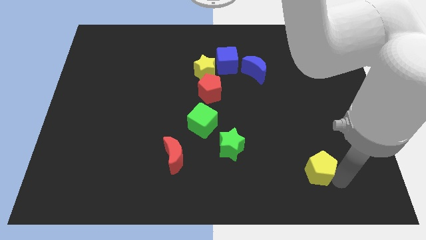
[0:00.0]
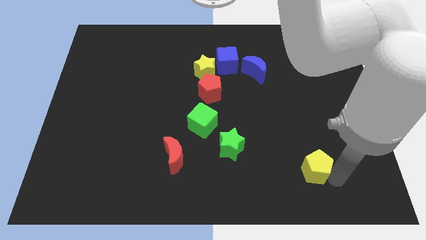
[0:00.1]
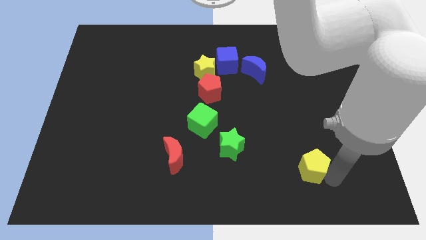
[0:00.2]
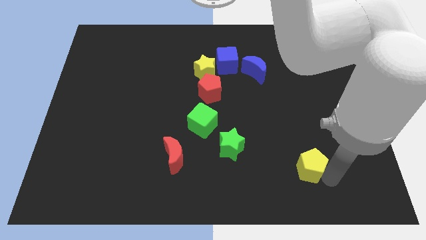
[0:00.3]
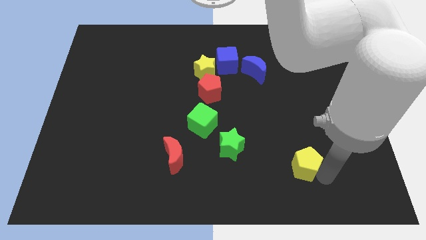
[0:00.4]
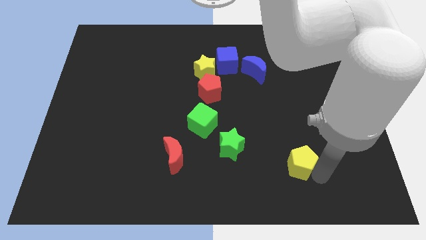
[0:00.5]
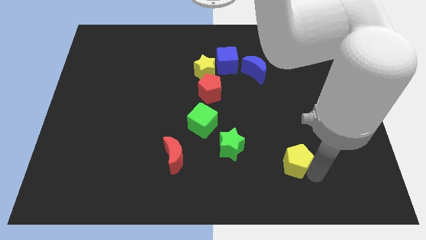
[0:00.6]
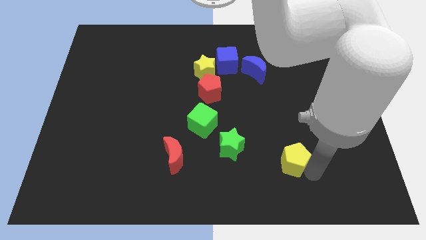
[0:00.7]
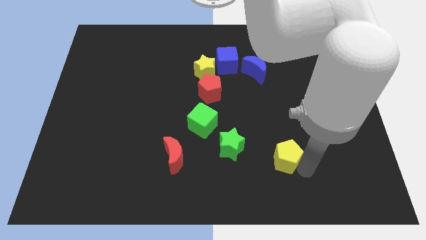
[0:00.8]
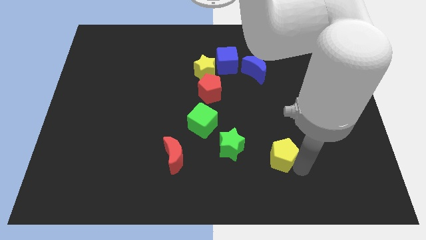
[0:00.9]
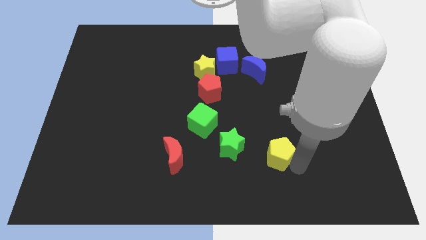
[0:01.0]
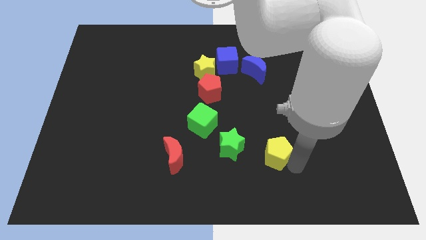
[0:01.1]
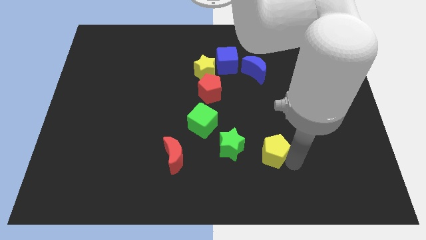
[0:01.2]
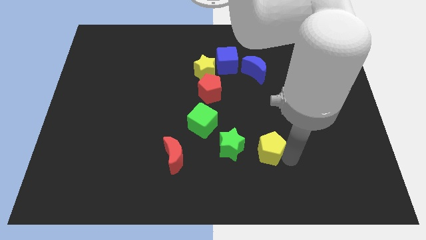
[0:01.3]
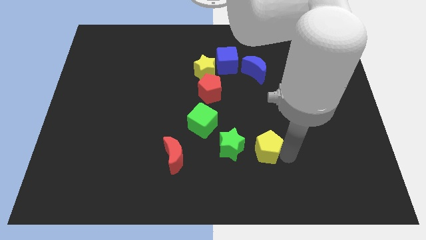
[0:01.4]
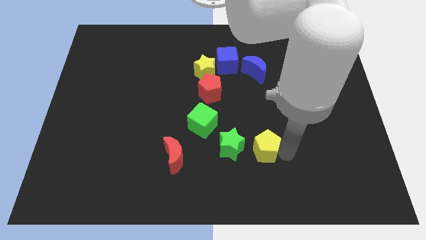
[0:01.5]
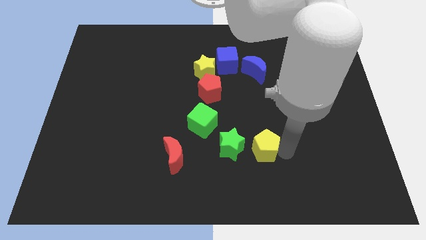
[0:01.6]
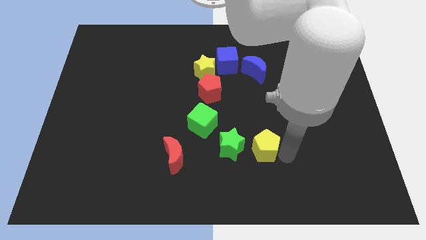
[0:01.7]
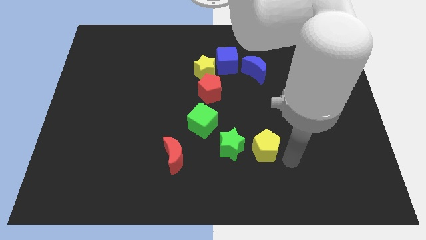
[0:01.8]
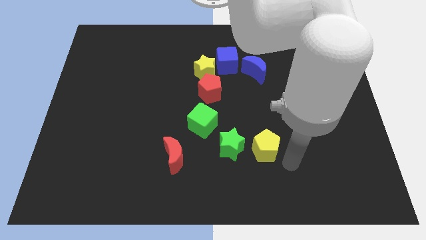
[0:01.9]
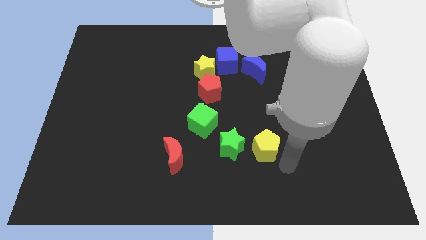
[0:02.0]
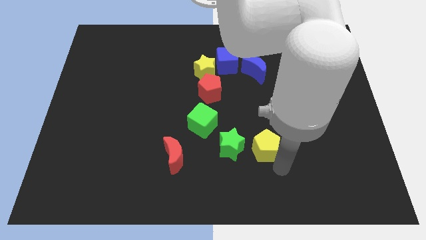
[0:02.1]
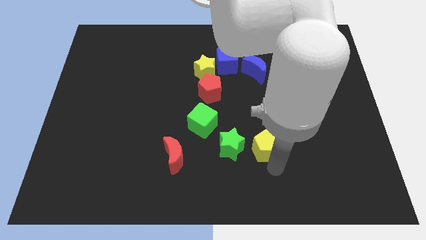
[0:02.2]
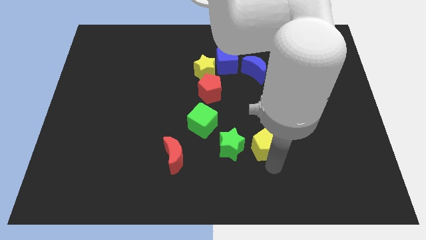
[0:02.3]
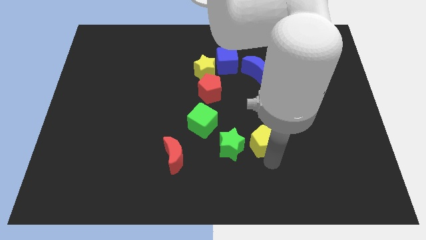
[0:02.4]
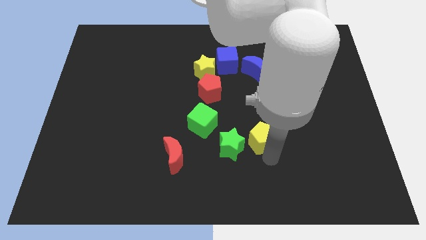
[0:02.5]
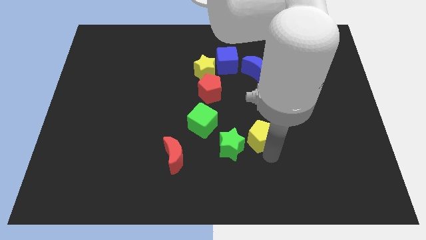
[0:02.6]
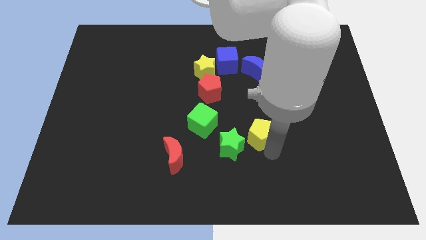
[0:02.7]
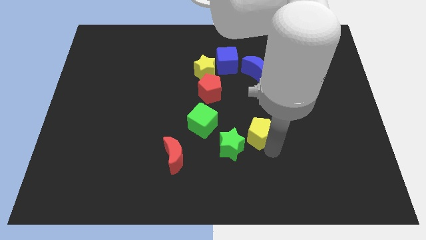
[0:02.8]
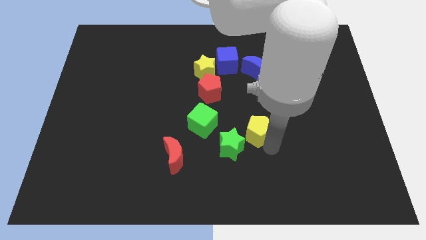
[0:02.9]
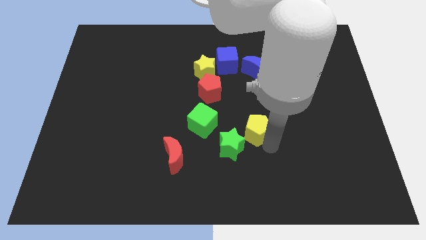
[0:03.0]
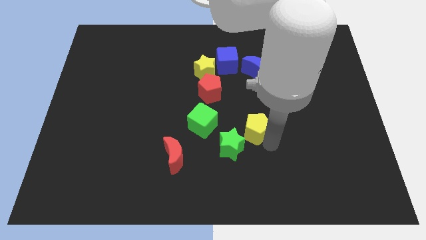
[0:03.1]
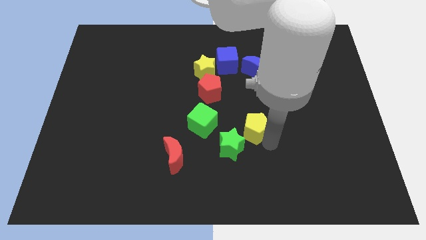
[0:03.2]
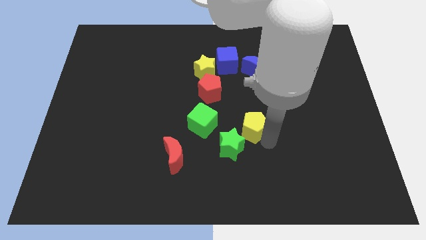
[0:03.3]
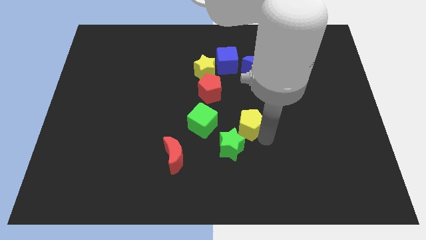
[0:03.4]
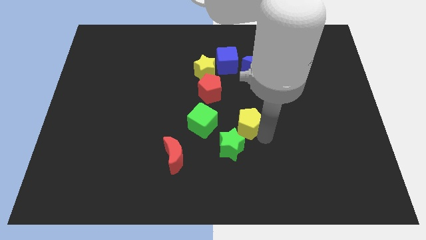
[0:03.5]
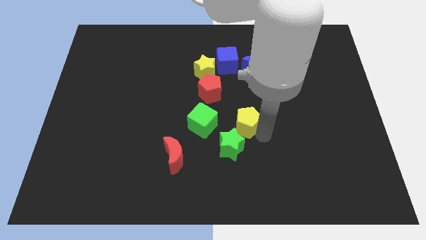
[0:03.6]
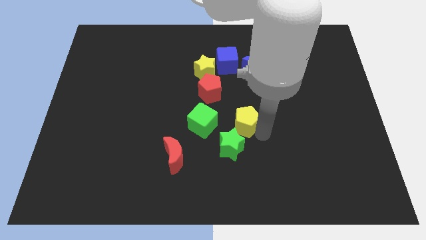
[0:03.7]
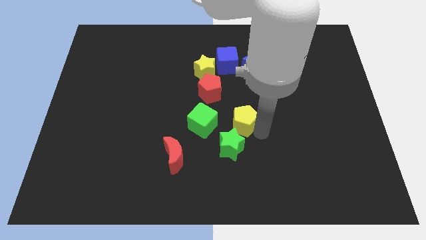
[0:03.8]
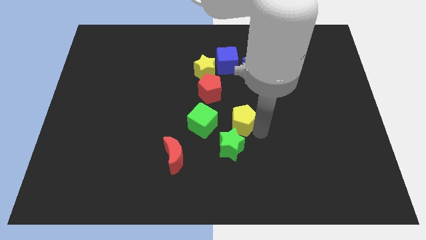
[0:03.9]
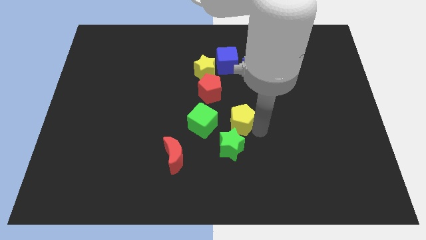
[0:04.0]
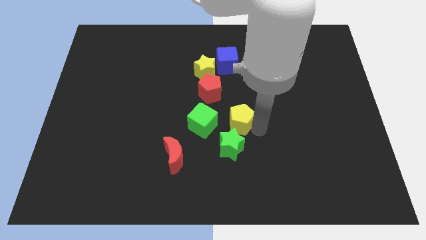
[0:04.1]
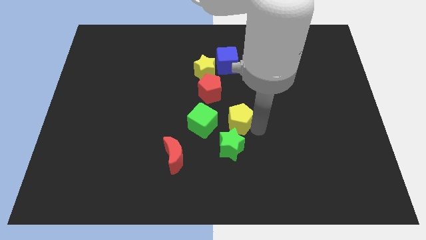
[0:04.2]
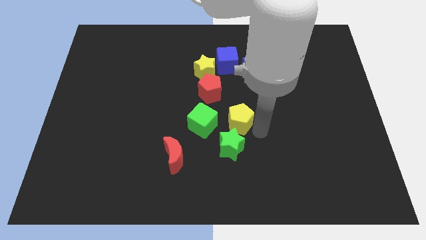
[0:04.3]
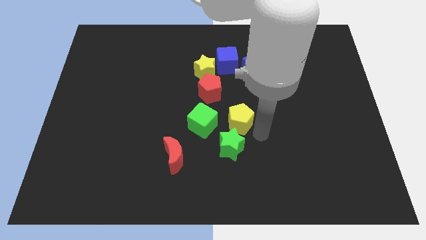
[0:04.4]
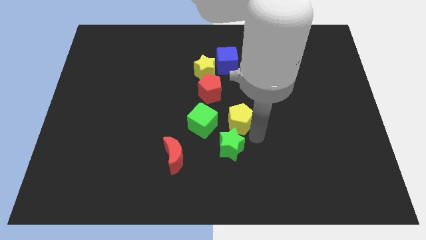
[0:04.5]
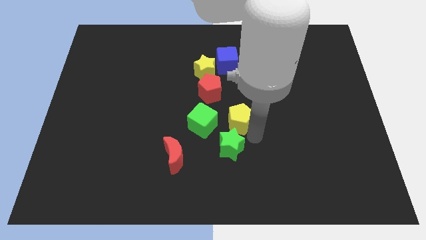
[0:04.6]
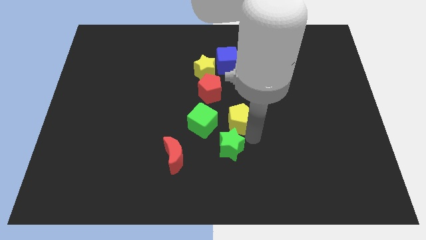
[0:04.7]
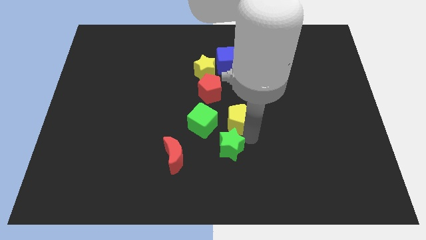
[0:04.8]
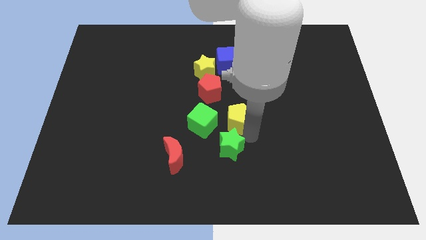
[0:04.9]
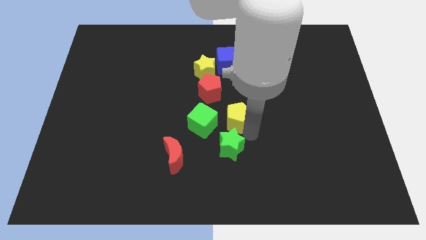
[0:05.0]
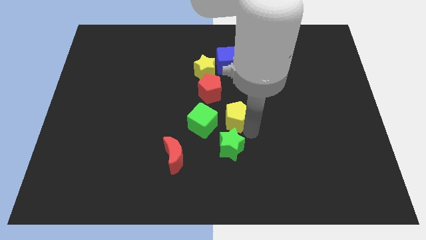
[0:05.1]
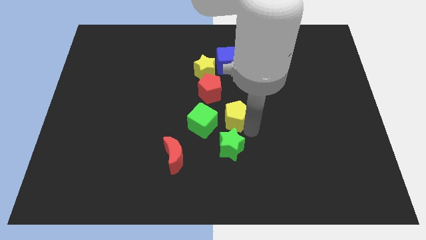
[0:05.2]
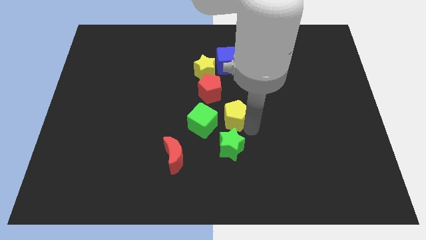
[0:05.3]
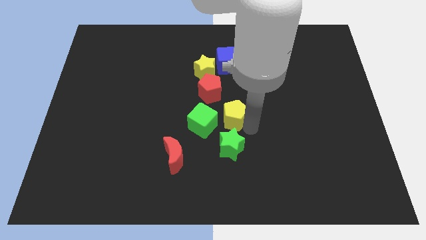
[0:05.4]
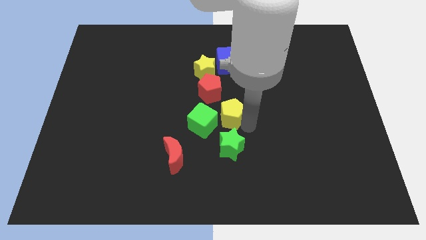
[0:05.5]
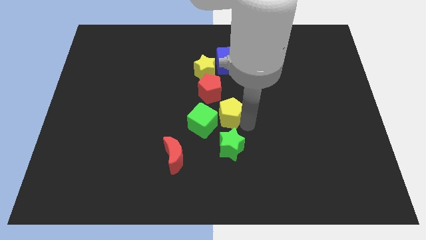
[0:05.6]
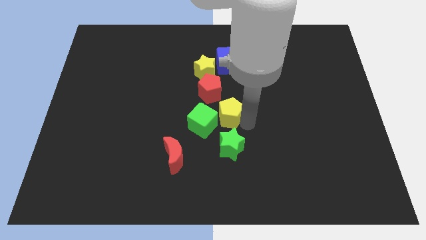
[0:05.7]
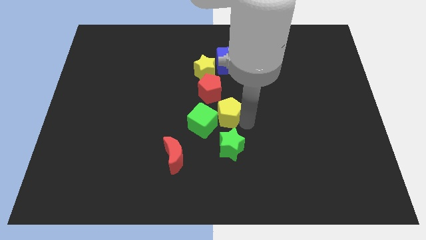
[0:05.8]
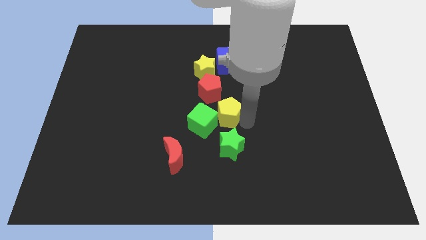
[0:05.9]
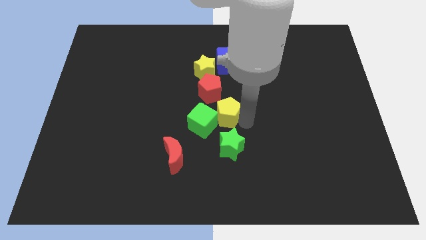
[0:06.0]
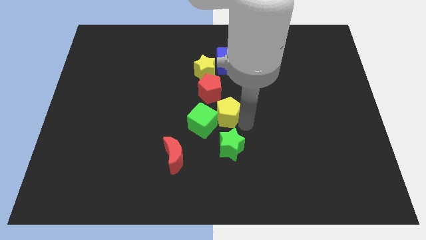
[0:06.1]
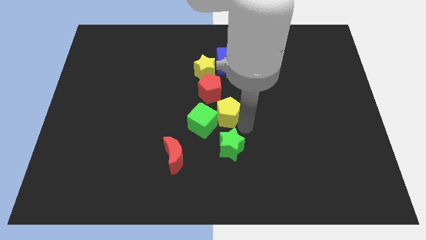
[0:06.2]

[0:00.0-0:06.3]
move the yellow pentagon to the right of the green cube

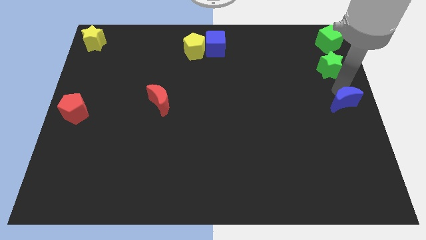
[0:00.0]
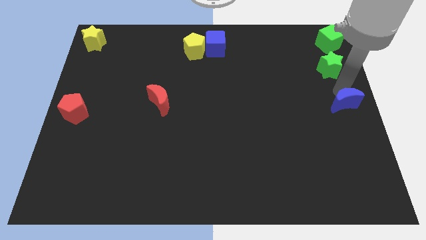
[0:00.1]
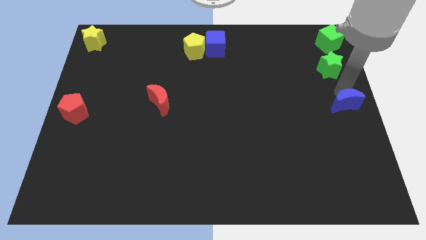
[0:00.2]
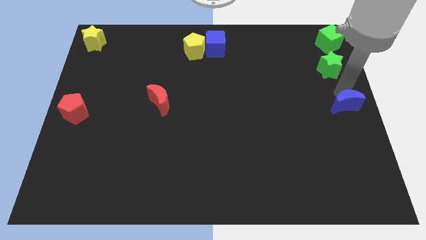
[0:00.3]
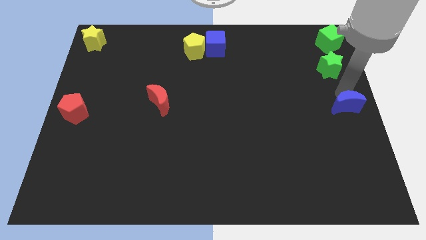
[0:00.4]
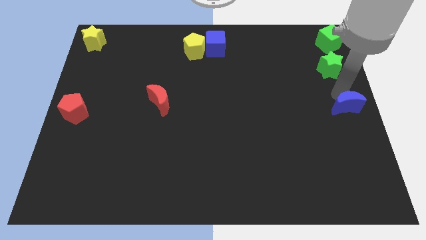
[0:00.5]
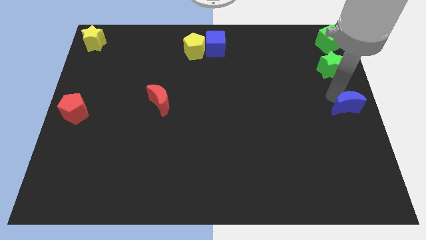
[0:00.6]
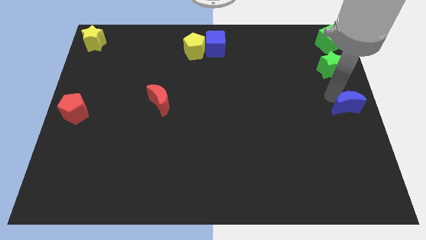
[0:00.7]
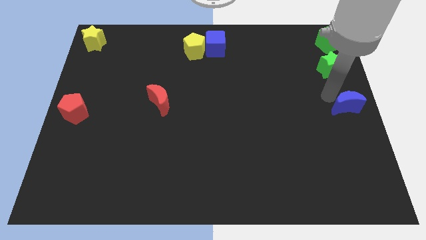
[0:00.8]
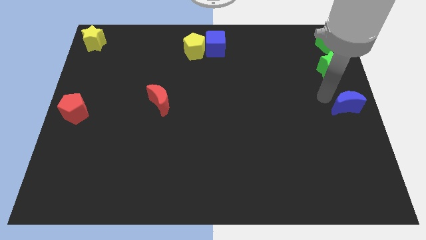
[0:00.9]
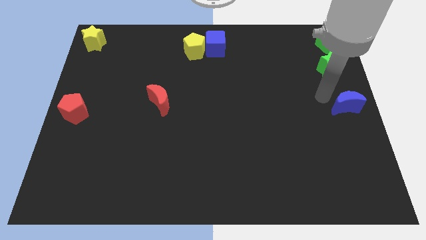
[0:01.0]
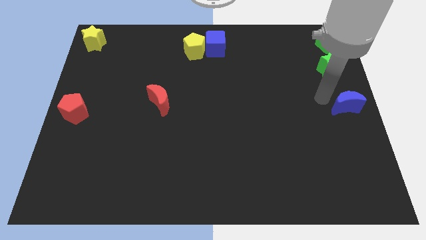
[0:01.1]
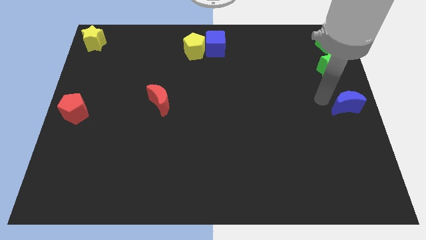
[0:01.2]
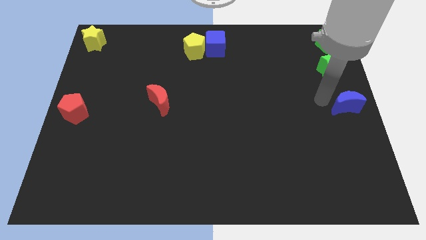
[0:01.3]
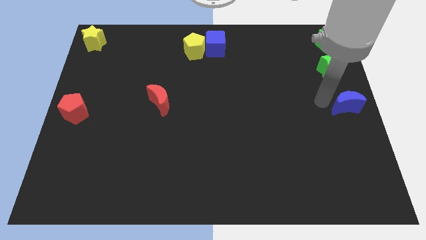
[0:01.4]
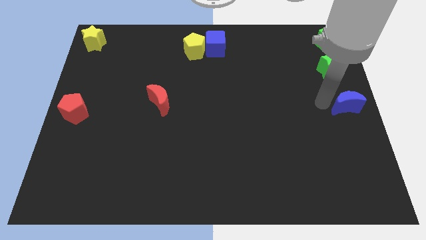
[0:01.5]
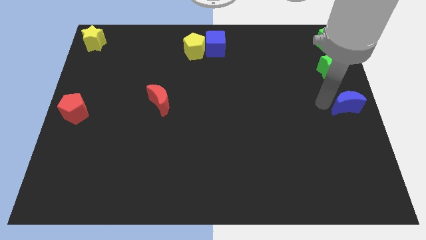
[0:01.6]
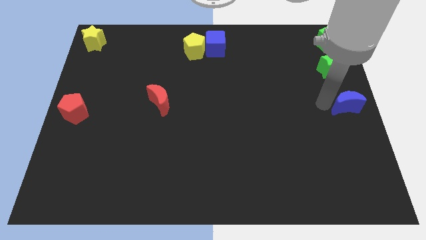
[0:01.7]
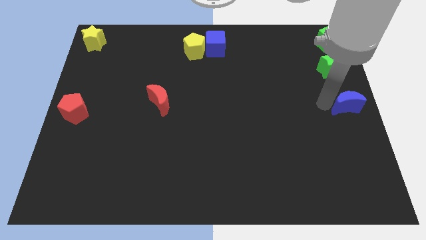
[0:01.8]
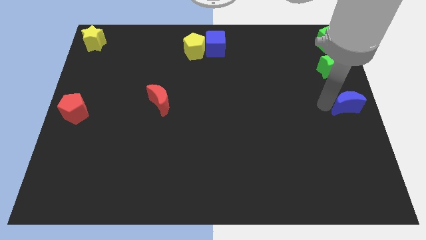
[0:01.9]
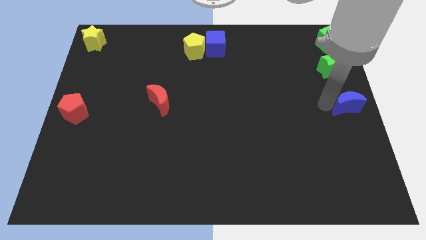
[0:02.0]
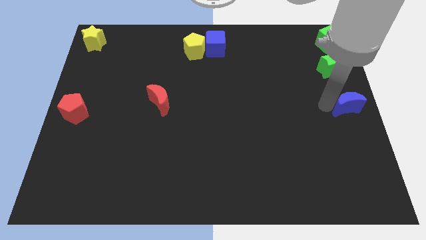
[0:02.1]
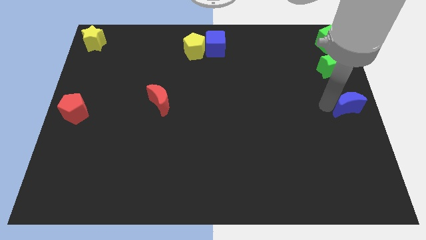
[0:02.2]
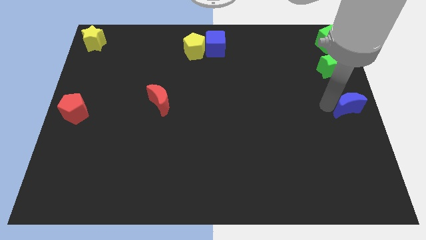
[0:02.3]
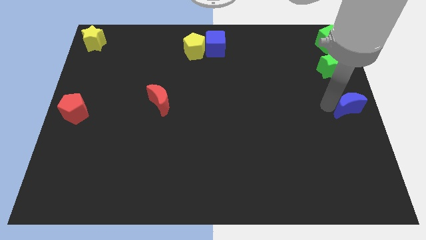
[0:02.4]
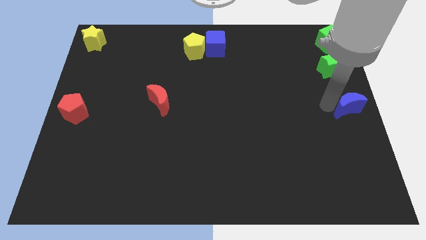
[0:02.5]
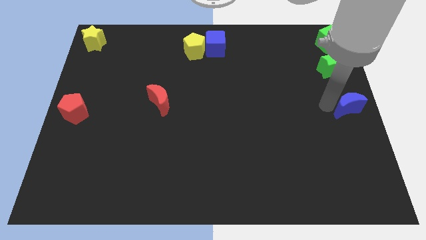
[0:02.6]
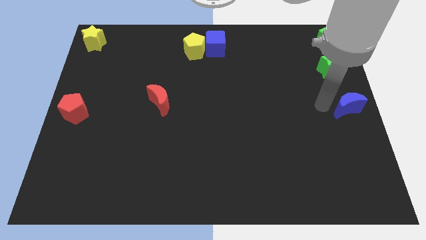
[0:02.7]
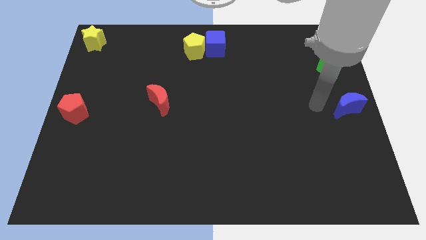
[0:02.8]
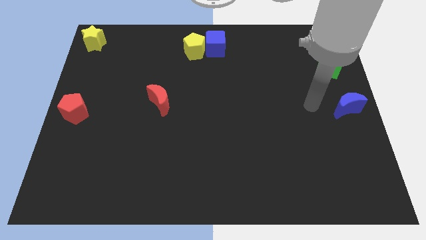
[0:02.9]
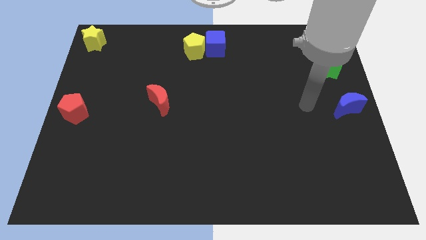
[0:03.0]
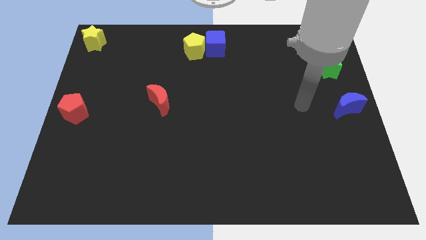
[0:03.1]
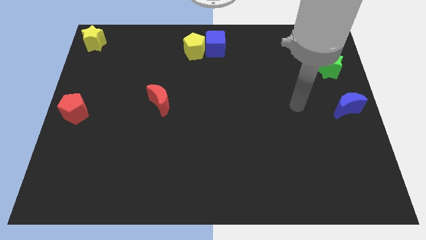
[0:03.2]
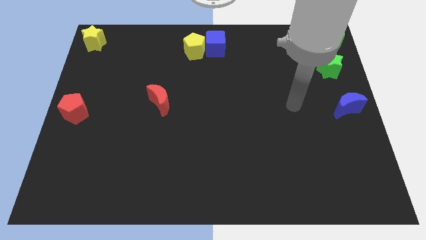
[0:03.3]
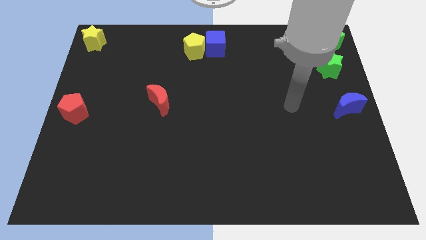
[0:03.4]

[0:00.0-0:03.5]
slightly push blue moon downwards a bit
